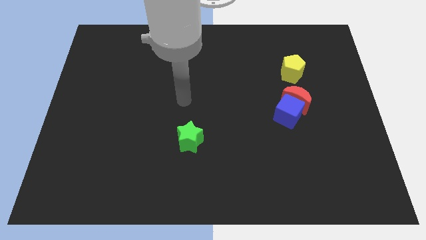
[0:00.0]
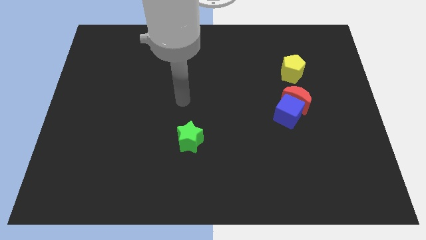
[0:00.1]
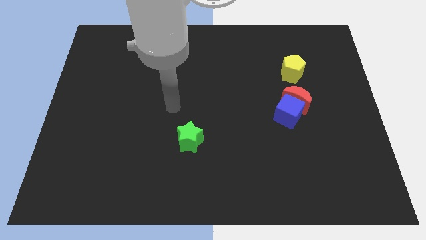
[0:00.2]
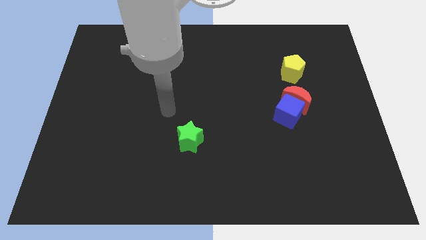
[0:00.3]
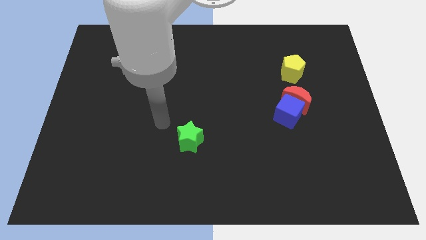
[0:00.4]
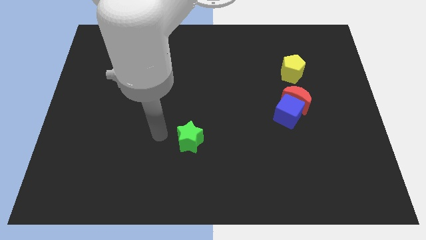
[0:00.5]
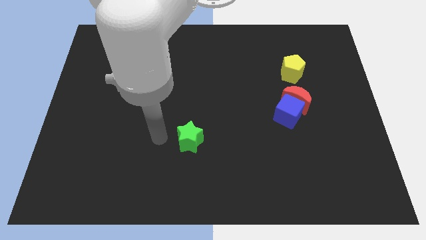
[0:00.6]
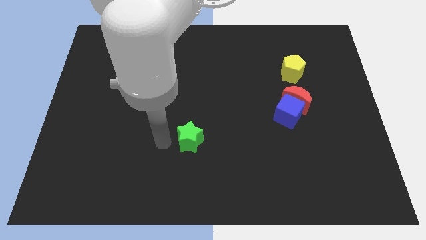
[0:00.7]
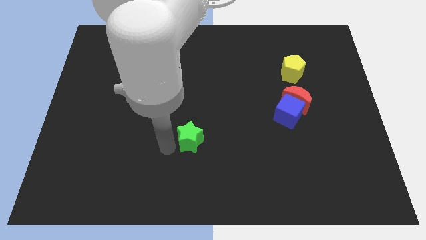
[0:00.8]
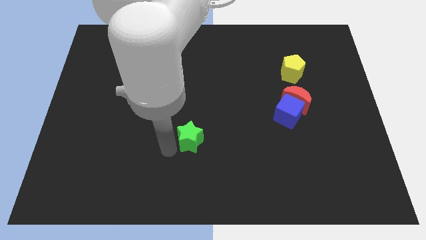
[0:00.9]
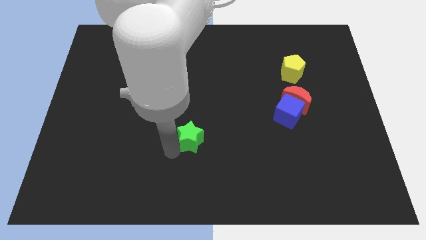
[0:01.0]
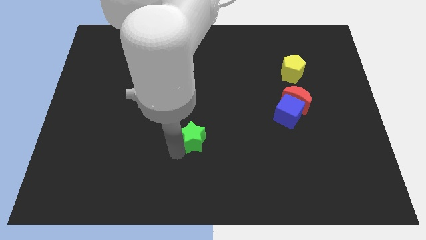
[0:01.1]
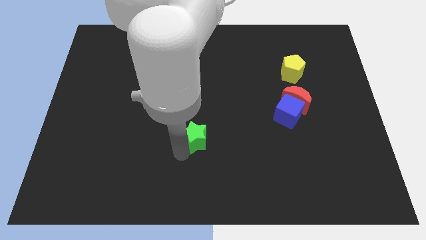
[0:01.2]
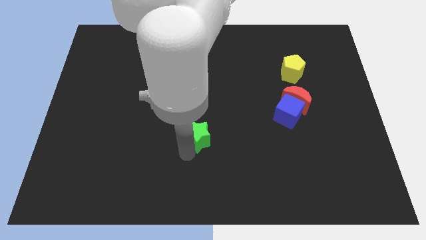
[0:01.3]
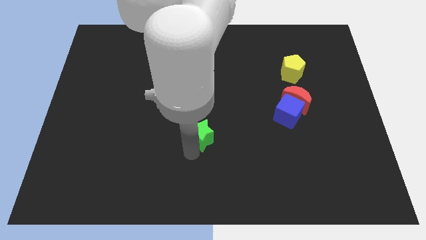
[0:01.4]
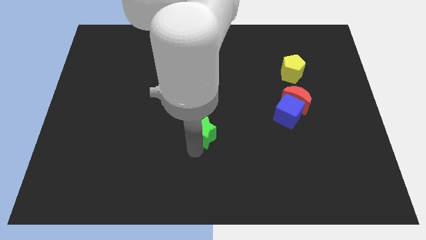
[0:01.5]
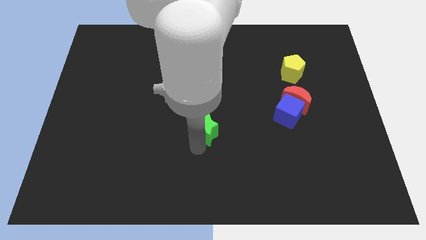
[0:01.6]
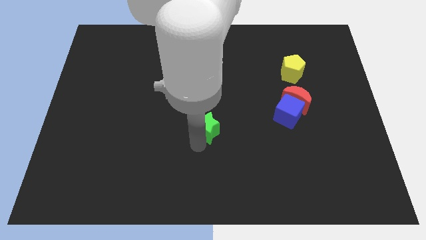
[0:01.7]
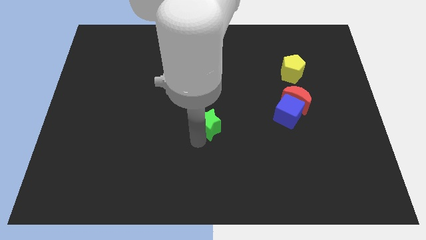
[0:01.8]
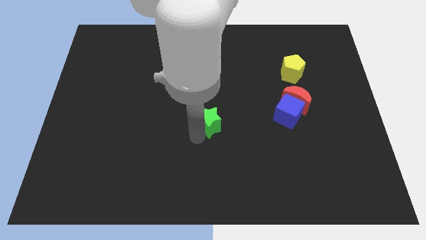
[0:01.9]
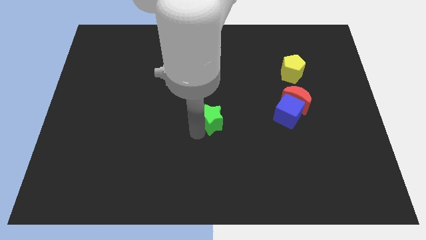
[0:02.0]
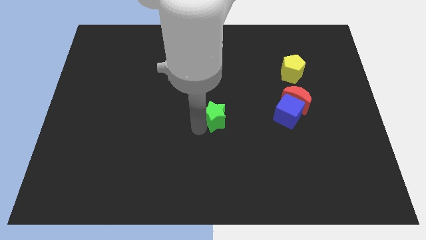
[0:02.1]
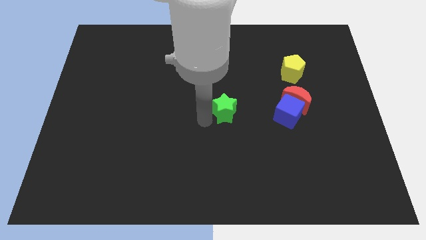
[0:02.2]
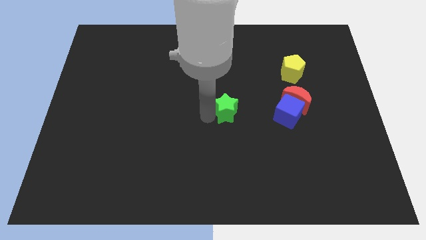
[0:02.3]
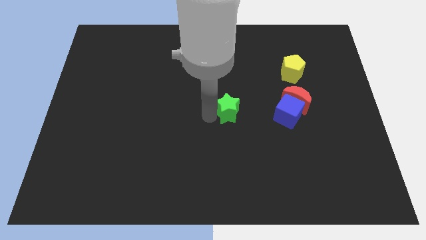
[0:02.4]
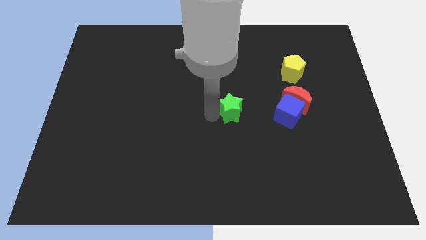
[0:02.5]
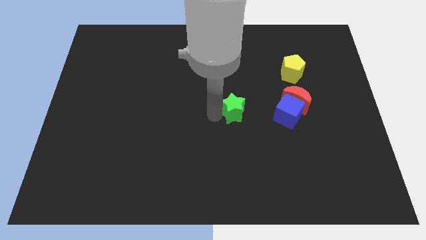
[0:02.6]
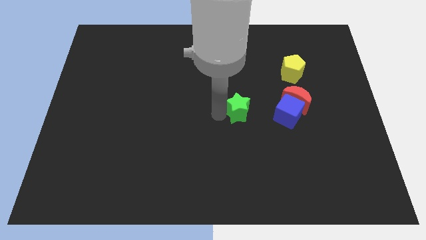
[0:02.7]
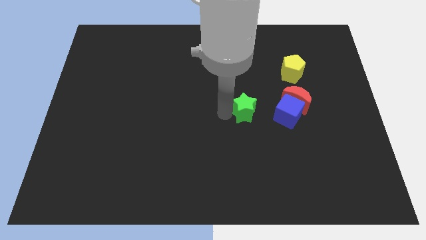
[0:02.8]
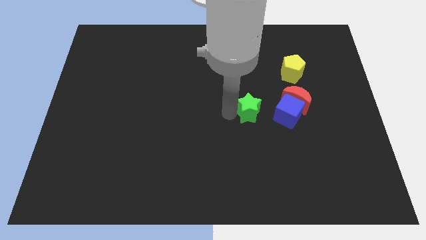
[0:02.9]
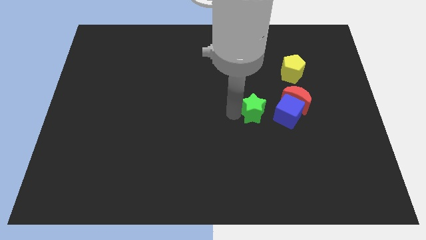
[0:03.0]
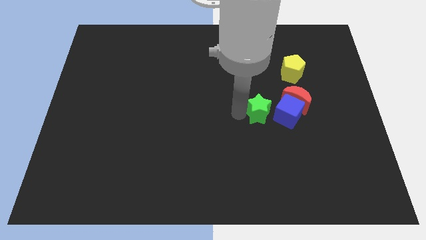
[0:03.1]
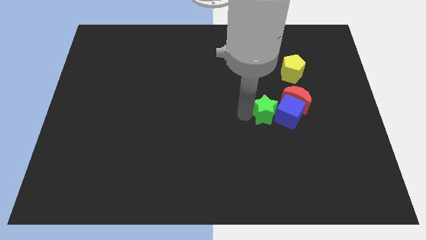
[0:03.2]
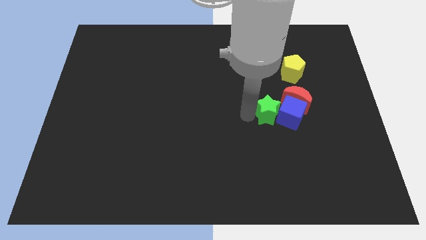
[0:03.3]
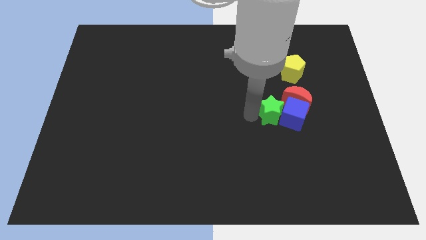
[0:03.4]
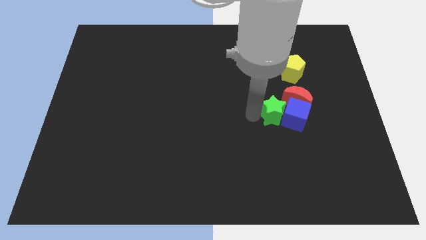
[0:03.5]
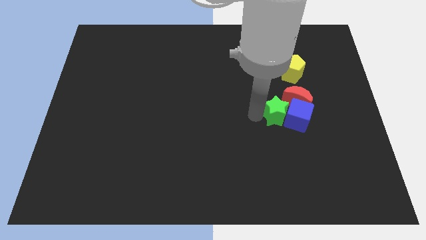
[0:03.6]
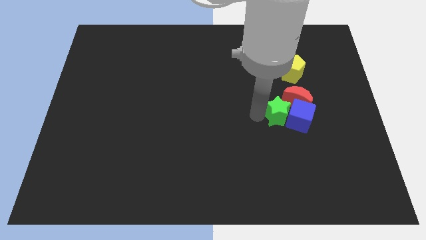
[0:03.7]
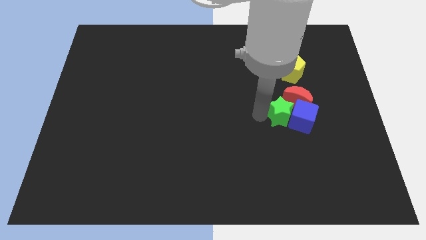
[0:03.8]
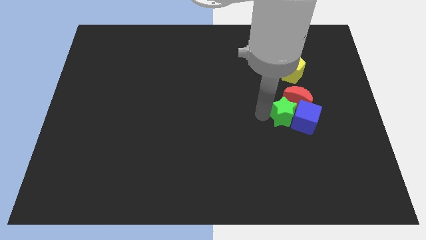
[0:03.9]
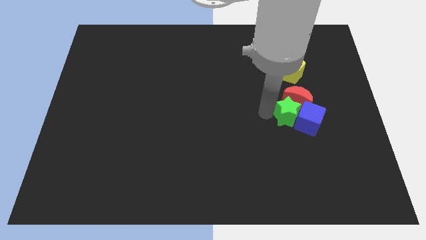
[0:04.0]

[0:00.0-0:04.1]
push the green block to the red block

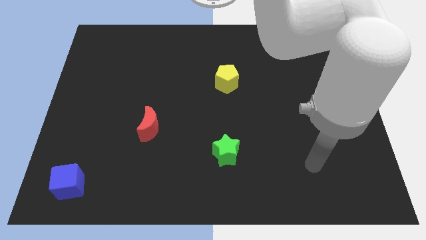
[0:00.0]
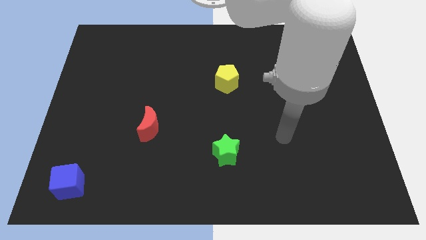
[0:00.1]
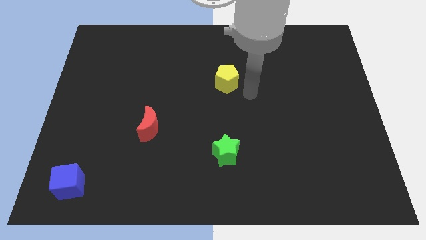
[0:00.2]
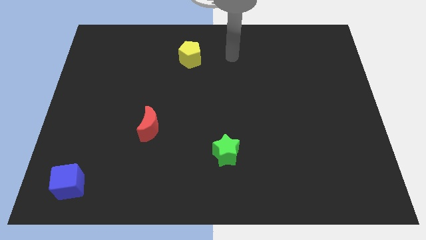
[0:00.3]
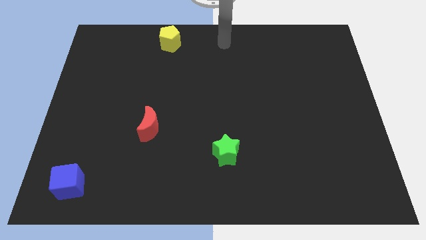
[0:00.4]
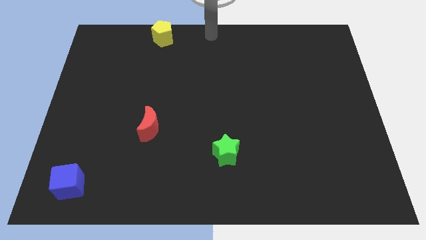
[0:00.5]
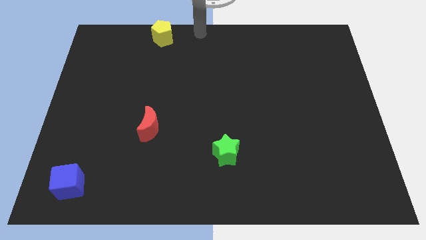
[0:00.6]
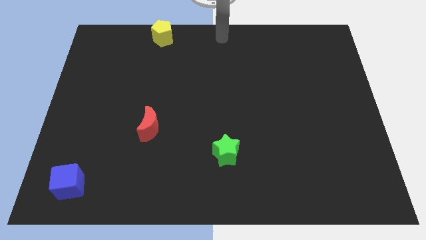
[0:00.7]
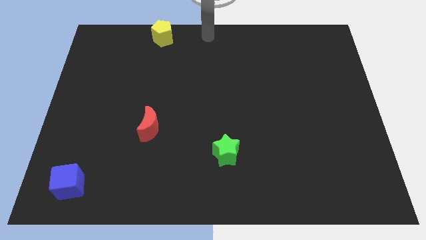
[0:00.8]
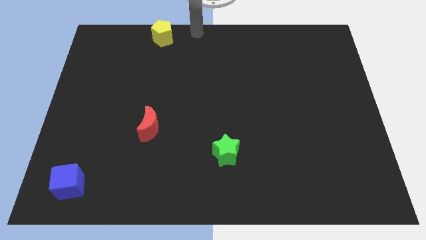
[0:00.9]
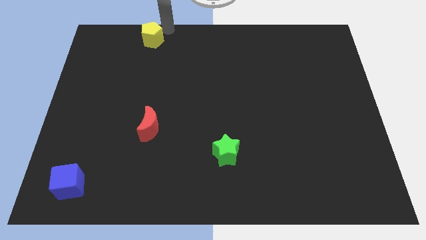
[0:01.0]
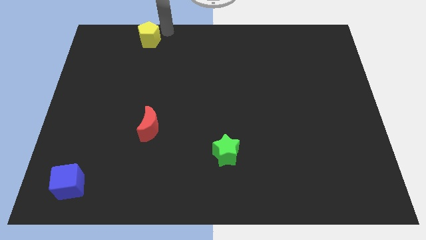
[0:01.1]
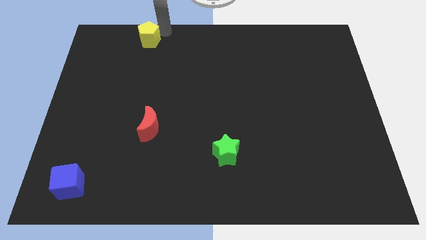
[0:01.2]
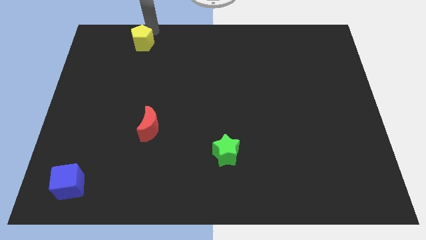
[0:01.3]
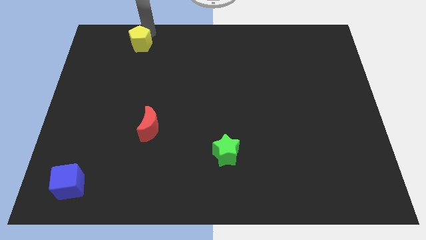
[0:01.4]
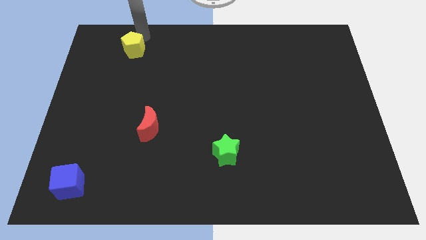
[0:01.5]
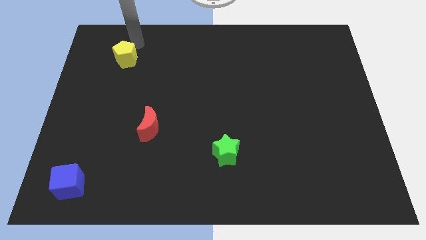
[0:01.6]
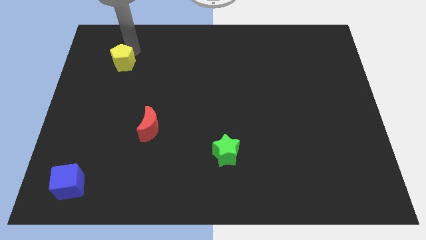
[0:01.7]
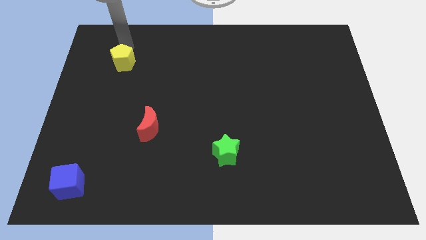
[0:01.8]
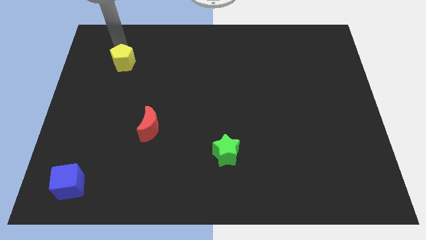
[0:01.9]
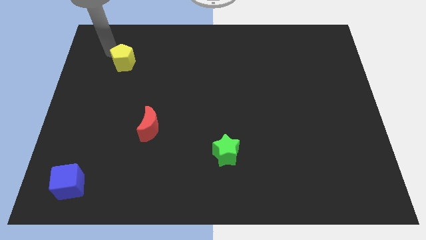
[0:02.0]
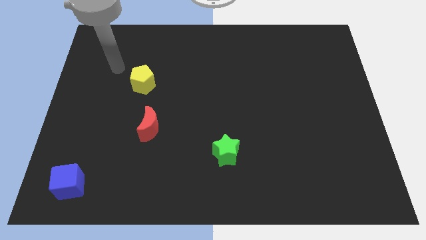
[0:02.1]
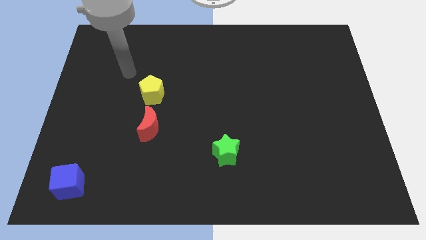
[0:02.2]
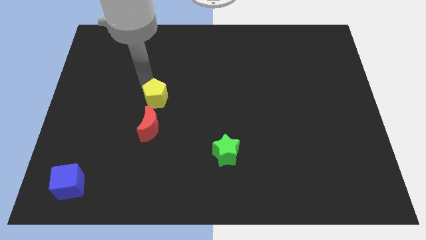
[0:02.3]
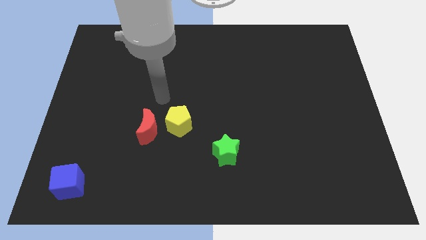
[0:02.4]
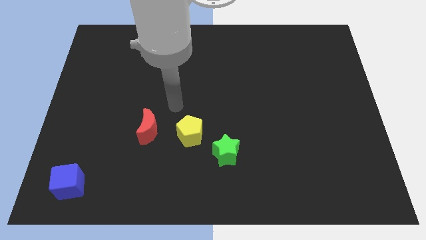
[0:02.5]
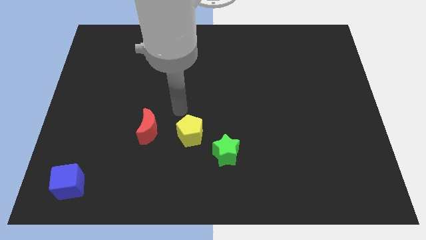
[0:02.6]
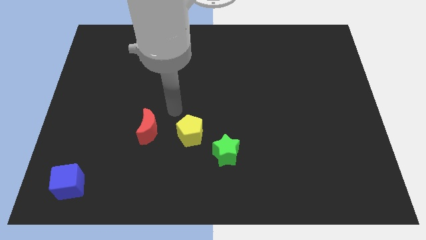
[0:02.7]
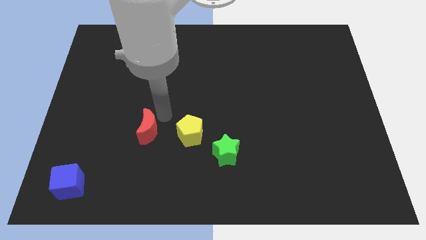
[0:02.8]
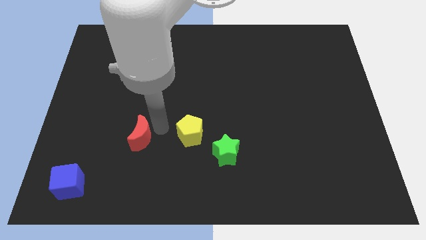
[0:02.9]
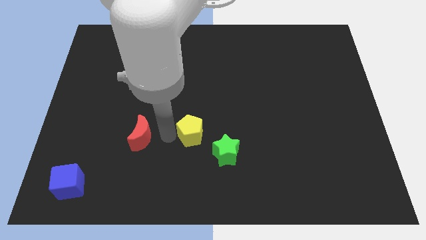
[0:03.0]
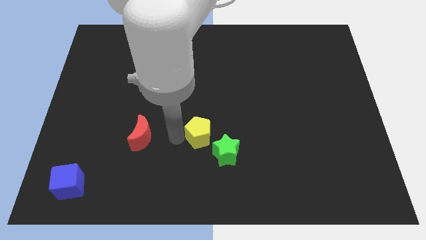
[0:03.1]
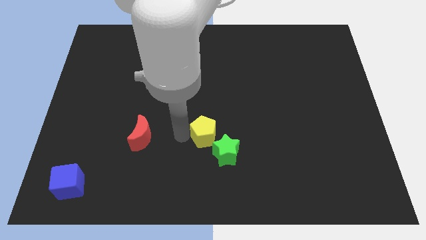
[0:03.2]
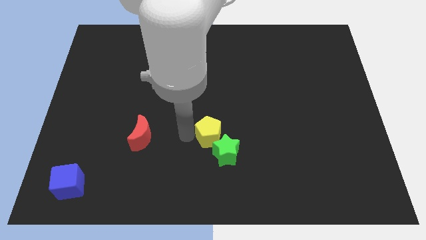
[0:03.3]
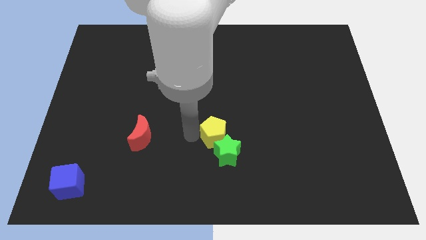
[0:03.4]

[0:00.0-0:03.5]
push the pentagon close to the green block

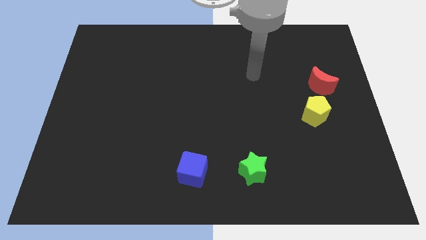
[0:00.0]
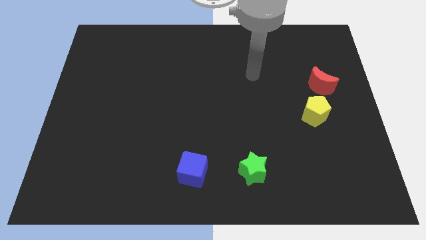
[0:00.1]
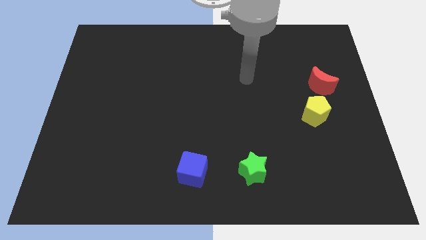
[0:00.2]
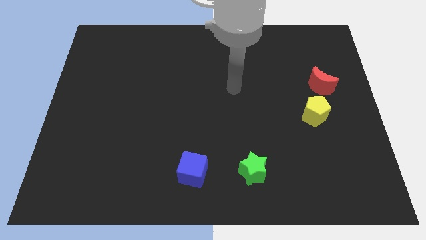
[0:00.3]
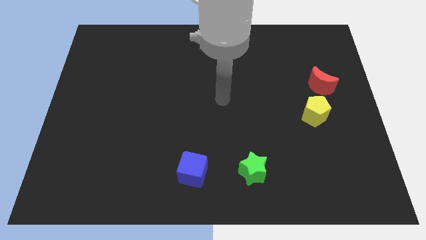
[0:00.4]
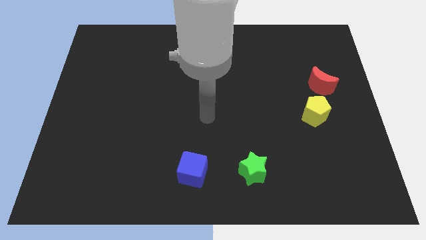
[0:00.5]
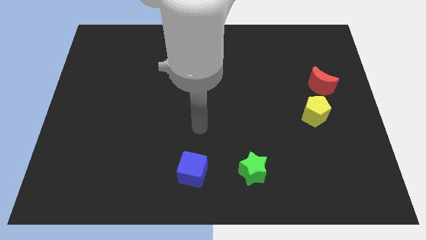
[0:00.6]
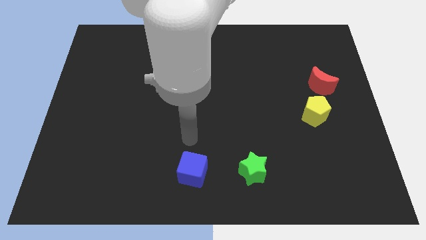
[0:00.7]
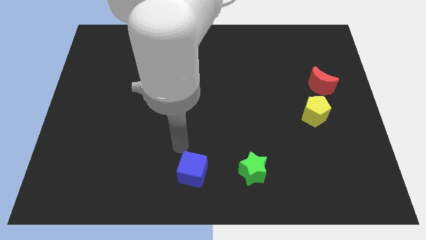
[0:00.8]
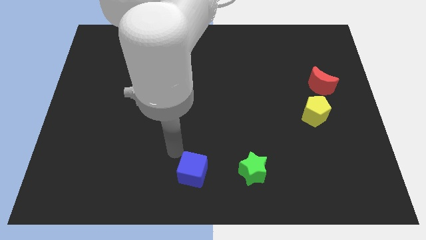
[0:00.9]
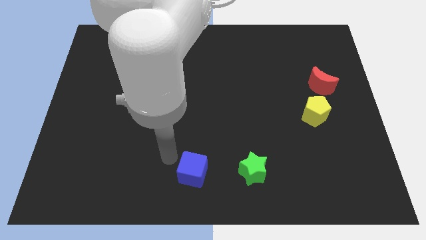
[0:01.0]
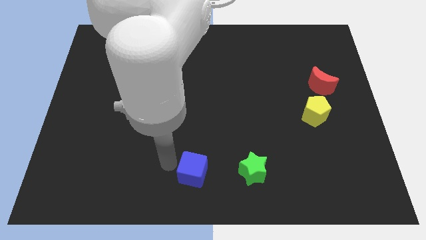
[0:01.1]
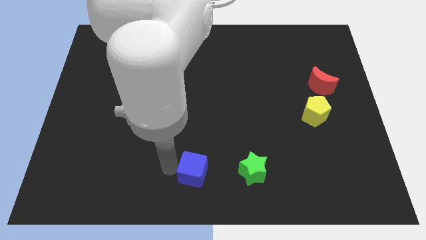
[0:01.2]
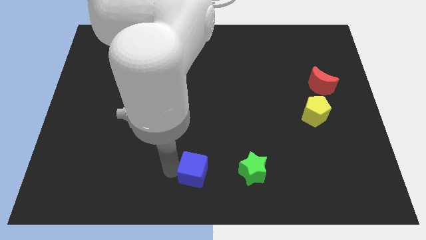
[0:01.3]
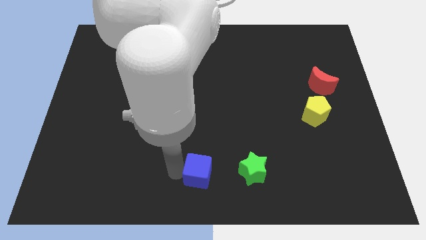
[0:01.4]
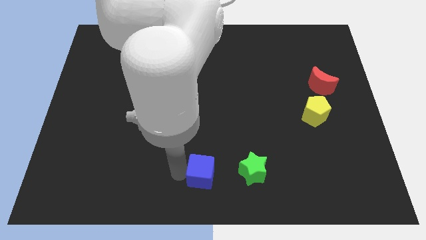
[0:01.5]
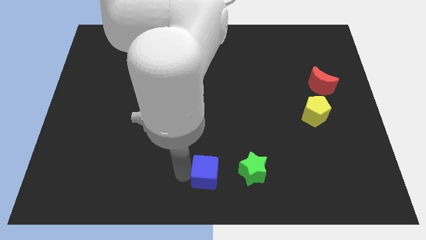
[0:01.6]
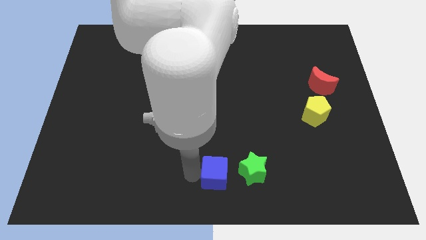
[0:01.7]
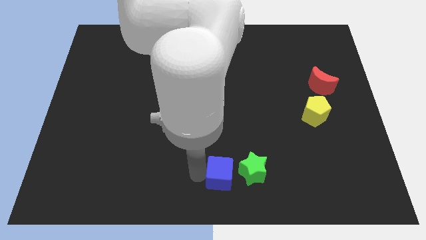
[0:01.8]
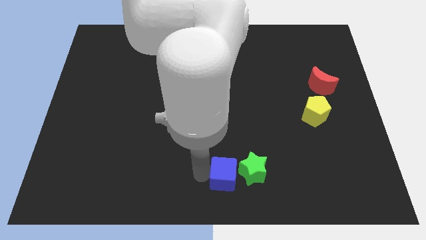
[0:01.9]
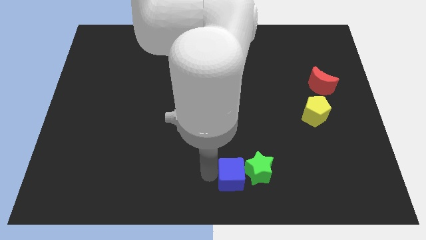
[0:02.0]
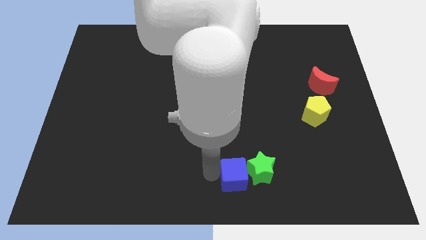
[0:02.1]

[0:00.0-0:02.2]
put the blue block towards the green star
